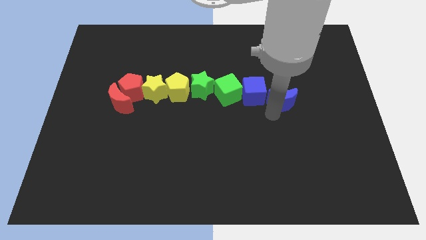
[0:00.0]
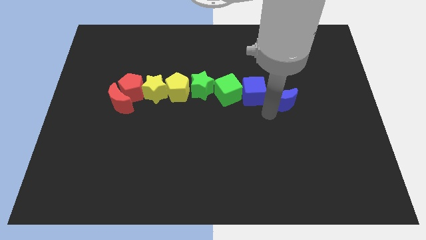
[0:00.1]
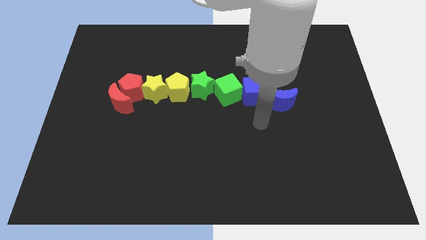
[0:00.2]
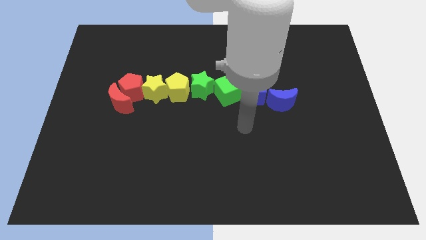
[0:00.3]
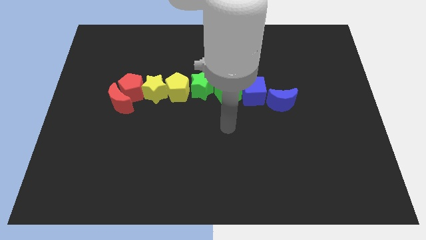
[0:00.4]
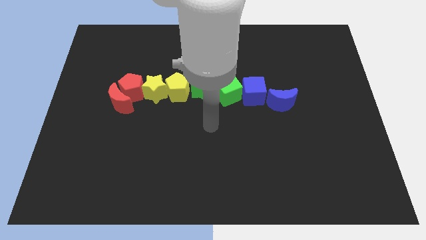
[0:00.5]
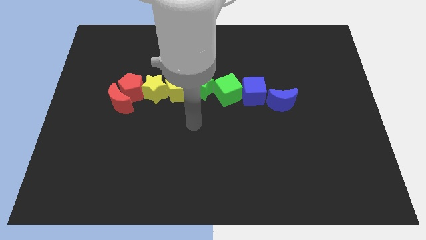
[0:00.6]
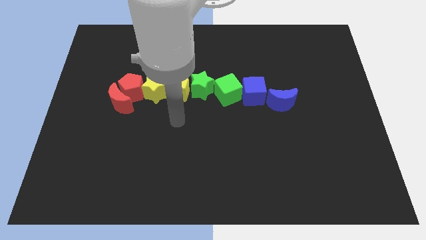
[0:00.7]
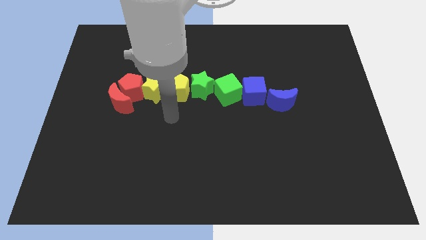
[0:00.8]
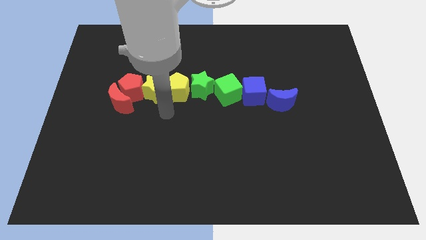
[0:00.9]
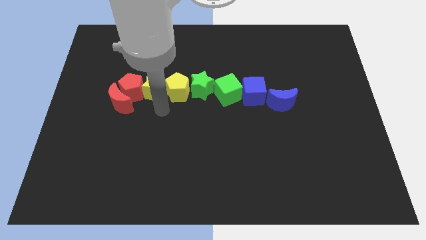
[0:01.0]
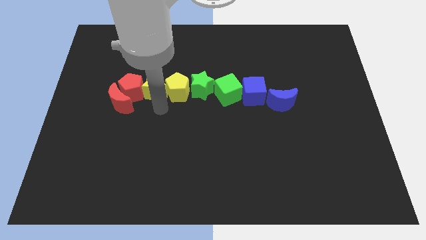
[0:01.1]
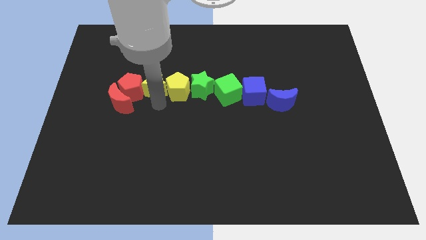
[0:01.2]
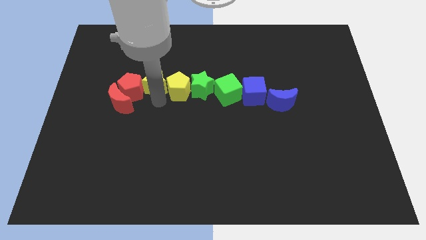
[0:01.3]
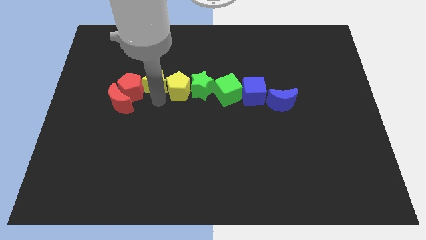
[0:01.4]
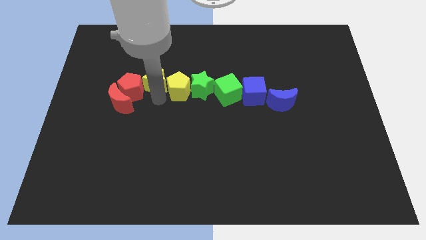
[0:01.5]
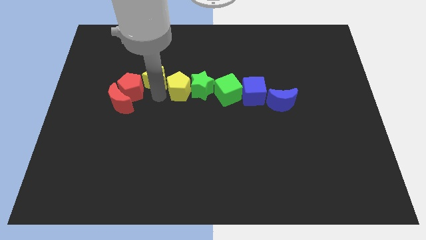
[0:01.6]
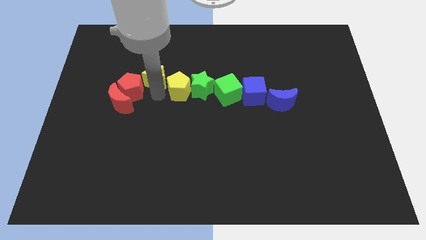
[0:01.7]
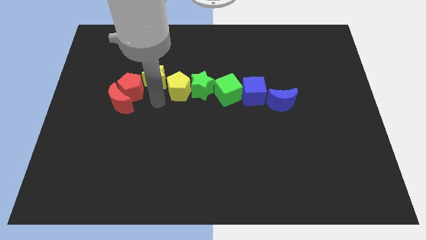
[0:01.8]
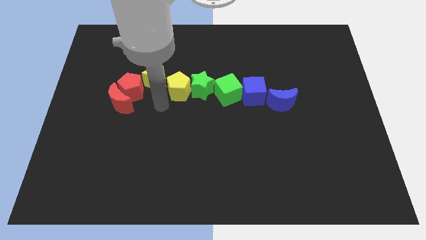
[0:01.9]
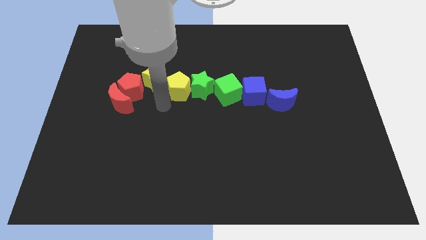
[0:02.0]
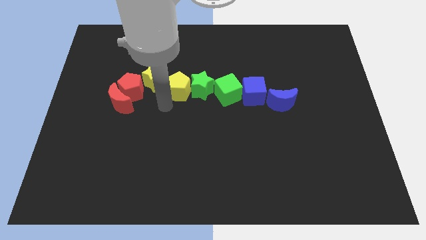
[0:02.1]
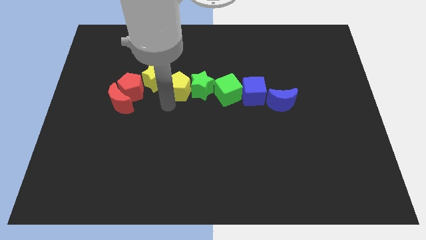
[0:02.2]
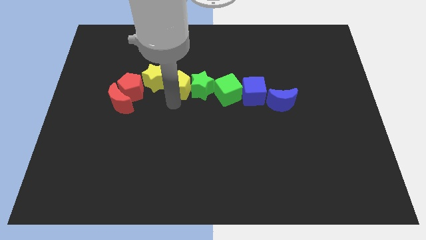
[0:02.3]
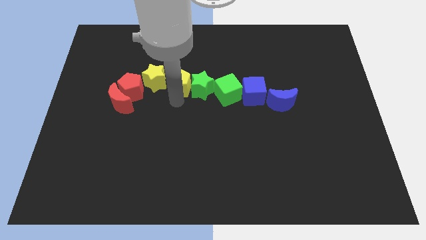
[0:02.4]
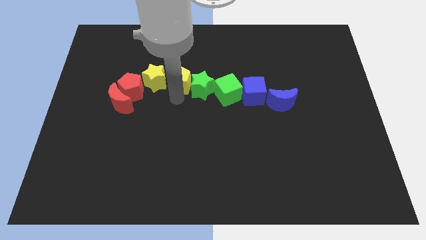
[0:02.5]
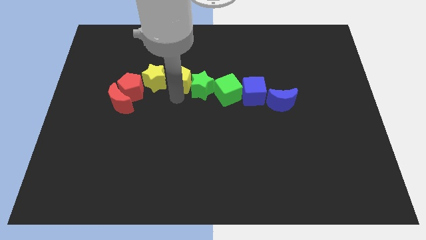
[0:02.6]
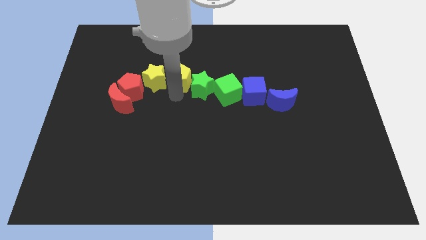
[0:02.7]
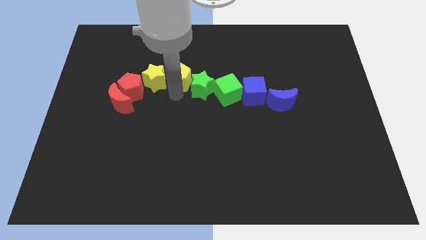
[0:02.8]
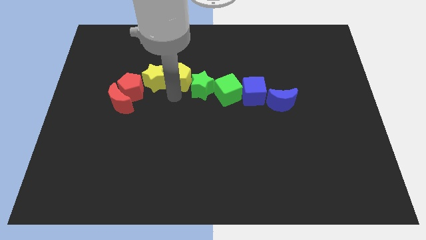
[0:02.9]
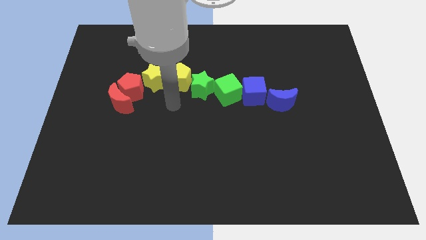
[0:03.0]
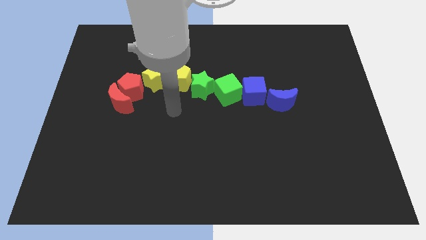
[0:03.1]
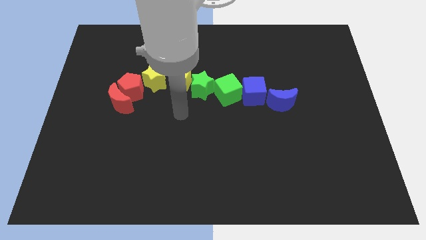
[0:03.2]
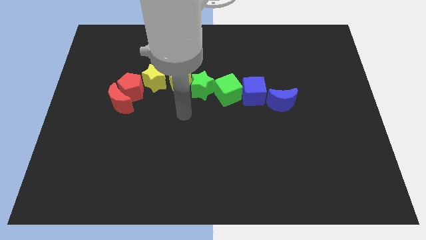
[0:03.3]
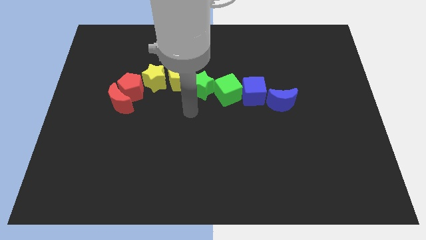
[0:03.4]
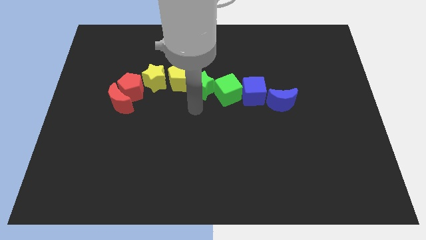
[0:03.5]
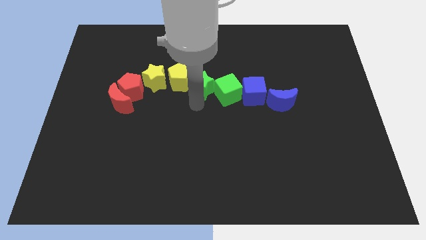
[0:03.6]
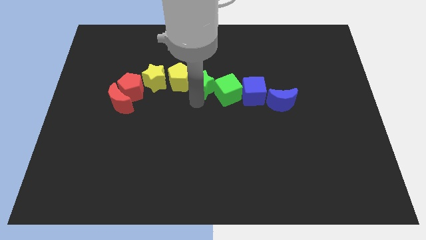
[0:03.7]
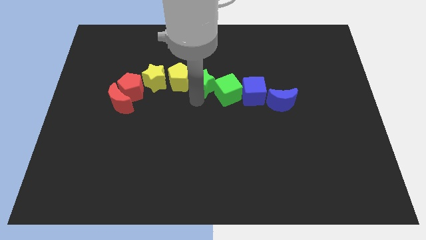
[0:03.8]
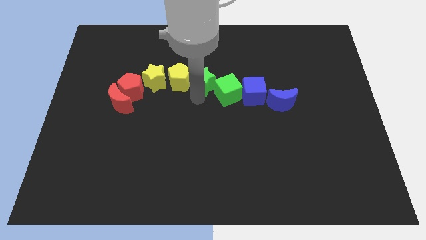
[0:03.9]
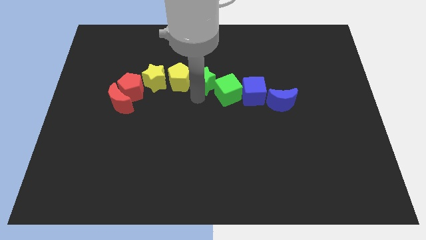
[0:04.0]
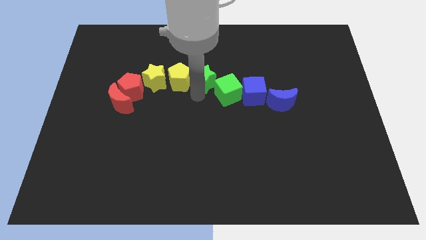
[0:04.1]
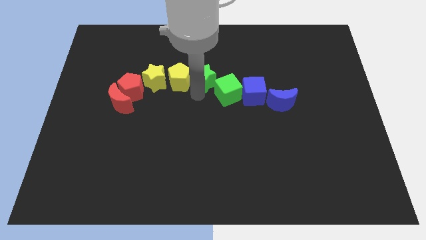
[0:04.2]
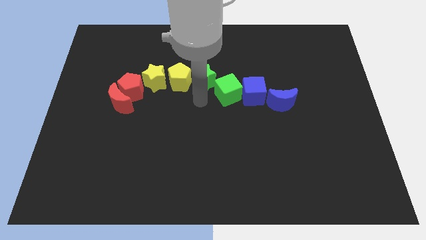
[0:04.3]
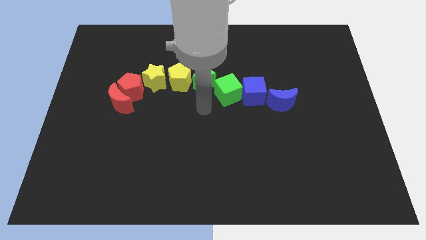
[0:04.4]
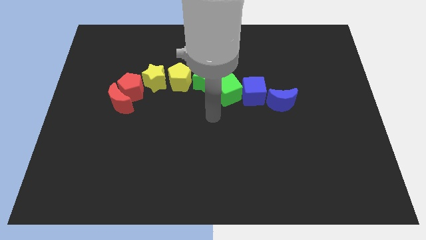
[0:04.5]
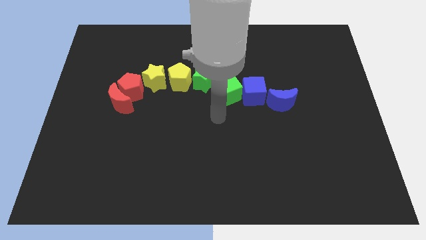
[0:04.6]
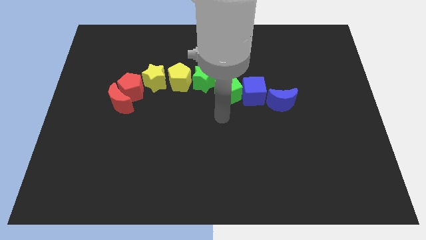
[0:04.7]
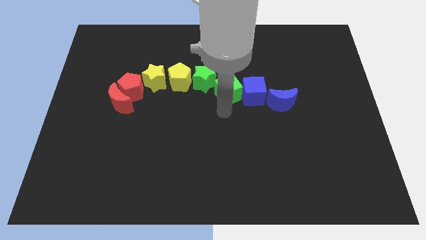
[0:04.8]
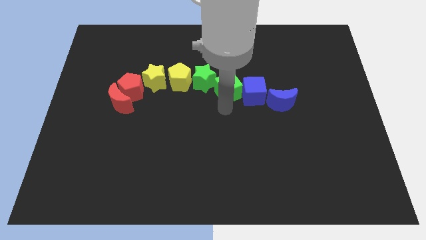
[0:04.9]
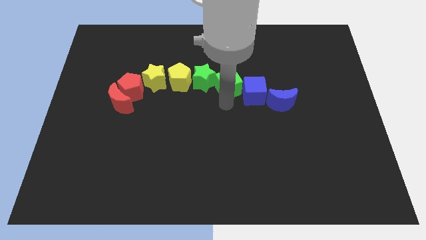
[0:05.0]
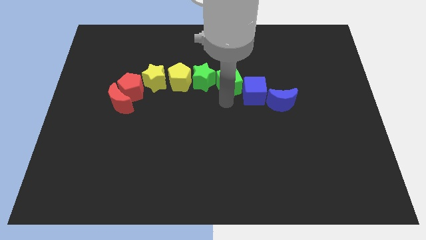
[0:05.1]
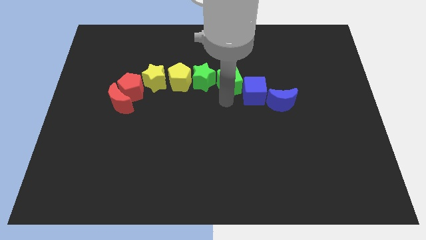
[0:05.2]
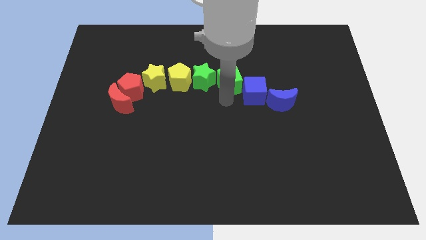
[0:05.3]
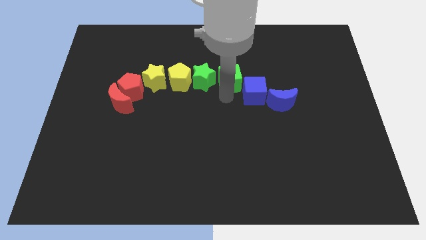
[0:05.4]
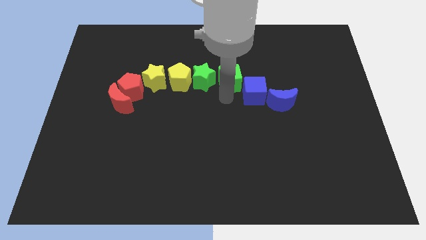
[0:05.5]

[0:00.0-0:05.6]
move the yellow blocks and green blocks slightly upward

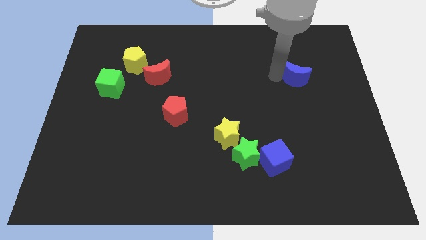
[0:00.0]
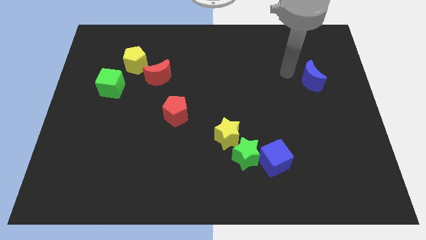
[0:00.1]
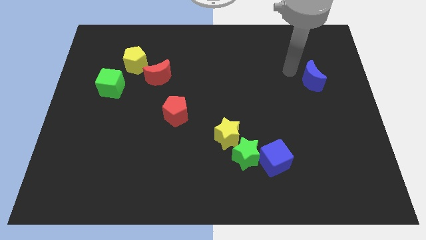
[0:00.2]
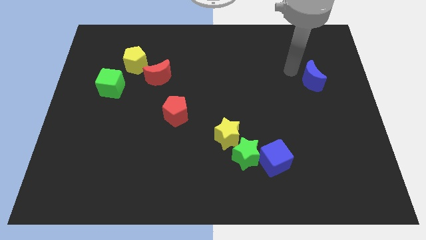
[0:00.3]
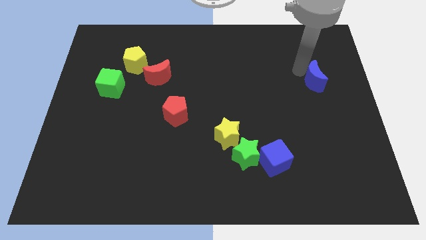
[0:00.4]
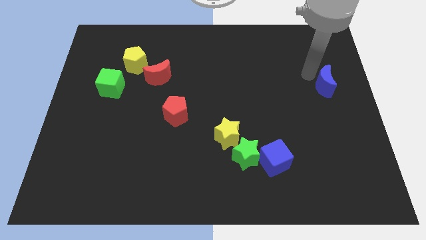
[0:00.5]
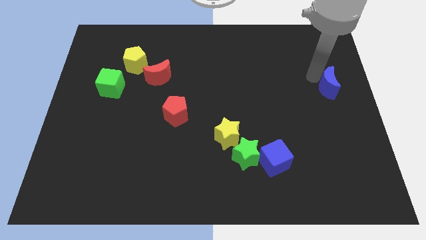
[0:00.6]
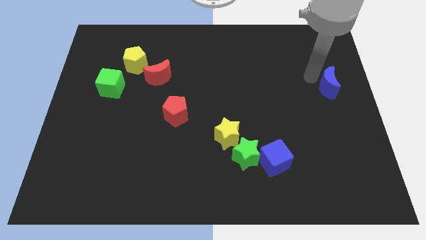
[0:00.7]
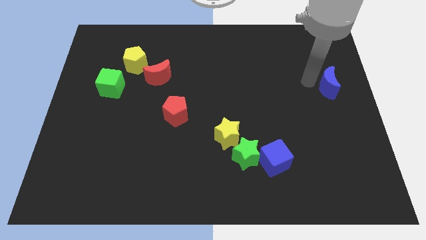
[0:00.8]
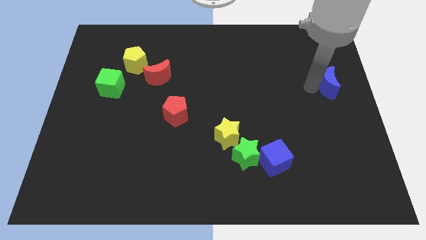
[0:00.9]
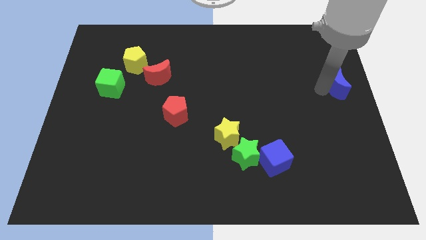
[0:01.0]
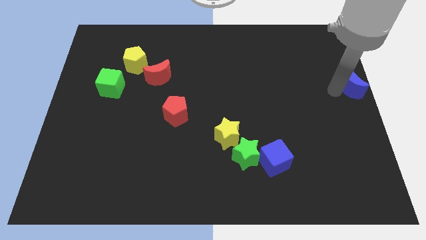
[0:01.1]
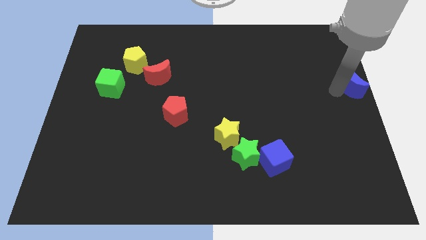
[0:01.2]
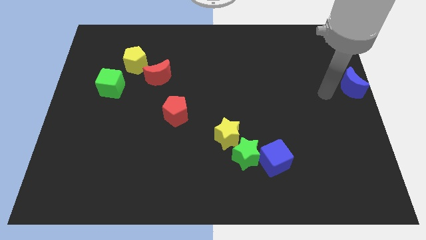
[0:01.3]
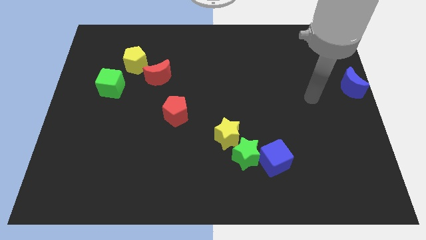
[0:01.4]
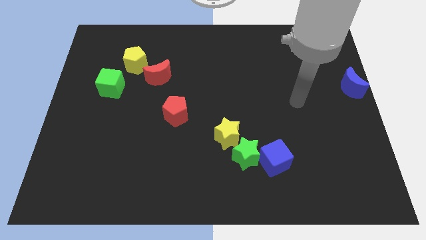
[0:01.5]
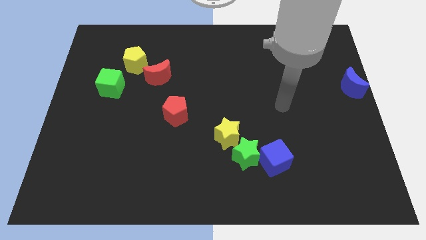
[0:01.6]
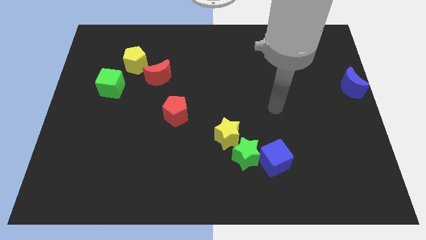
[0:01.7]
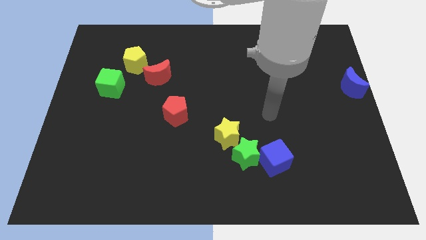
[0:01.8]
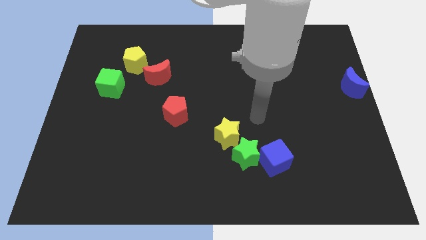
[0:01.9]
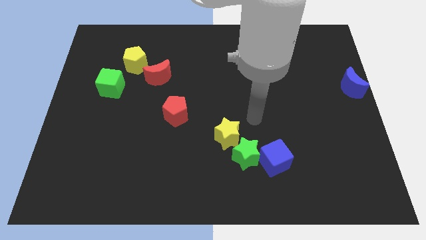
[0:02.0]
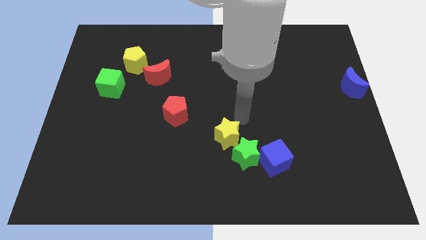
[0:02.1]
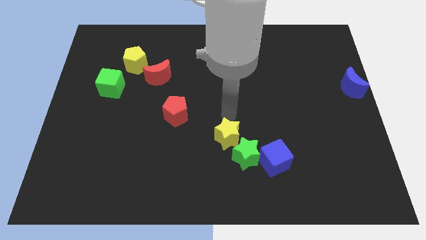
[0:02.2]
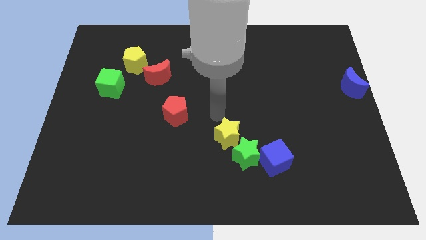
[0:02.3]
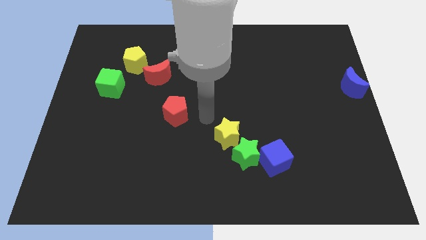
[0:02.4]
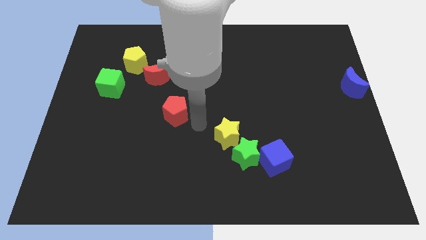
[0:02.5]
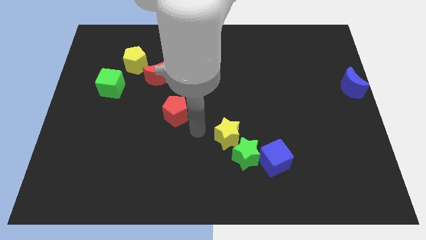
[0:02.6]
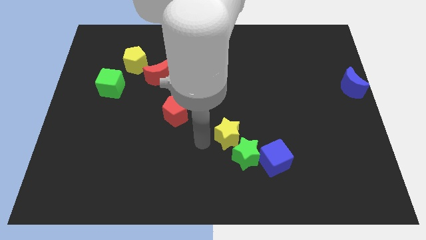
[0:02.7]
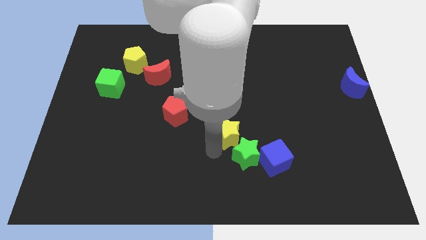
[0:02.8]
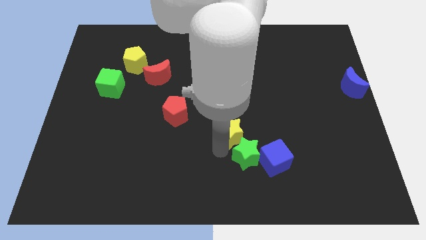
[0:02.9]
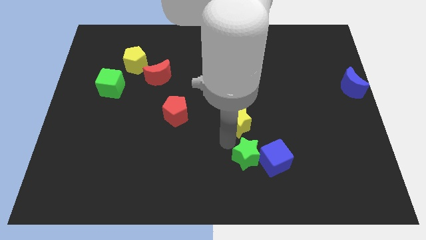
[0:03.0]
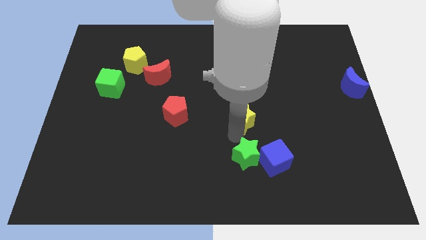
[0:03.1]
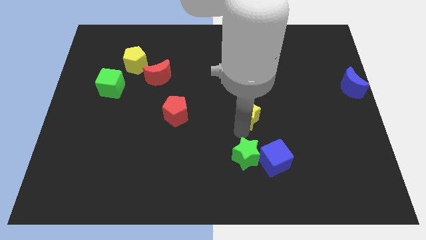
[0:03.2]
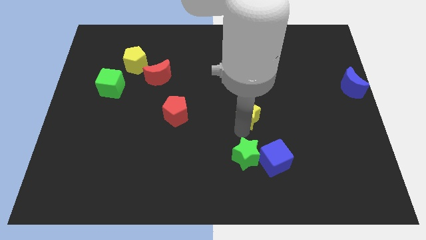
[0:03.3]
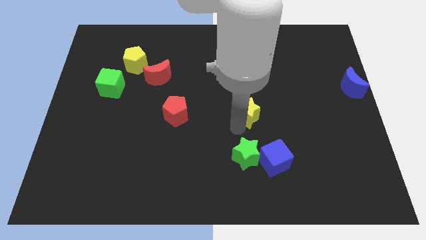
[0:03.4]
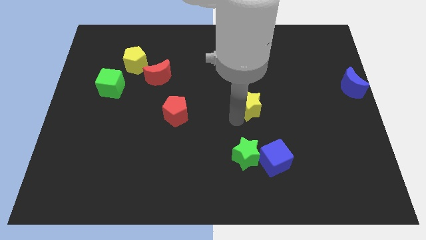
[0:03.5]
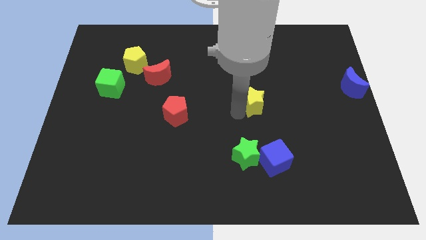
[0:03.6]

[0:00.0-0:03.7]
separate the yellow star from the green star
